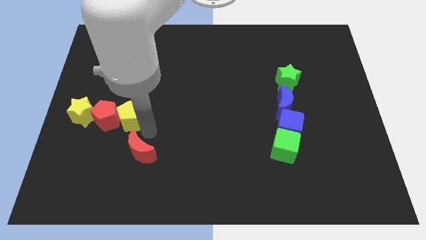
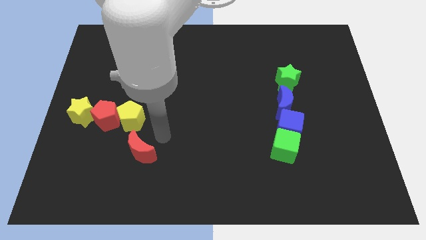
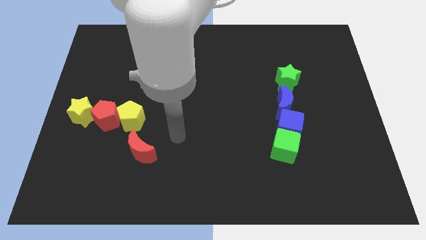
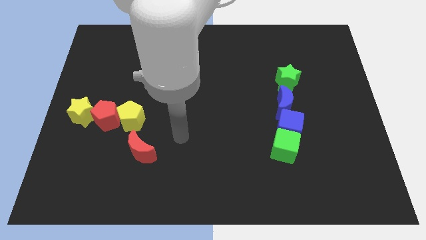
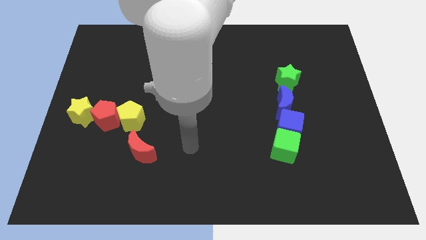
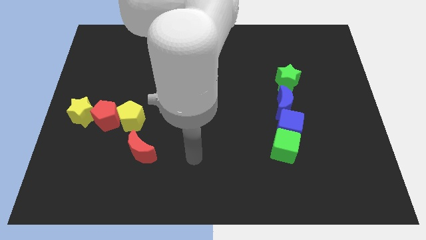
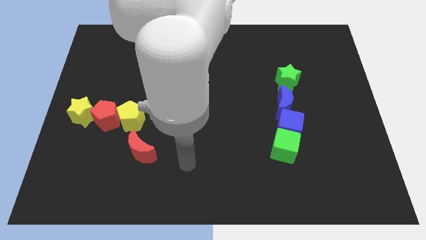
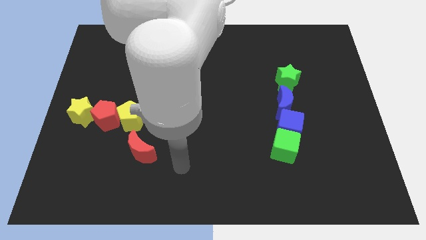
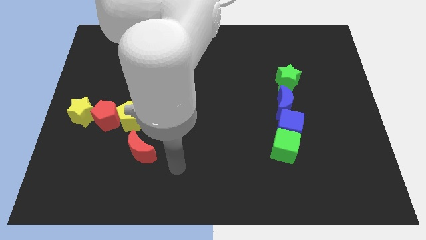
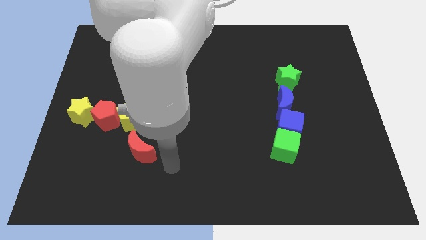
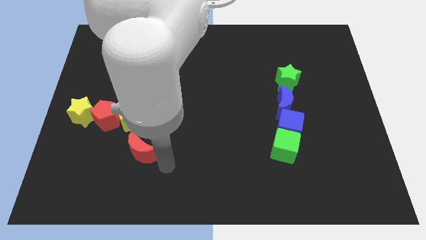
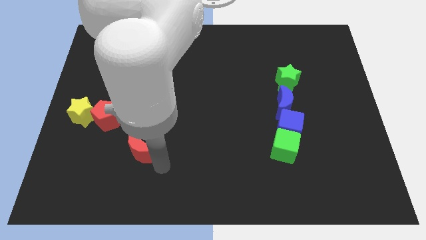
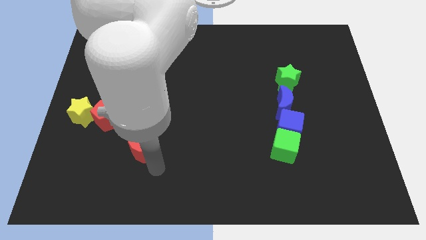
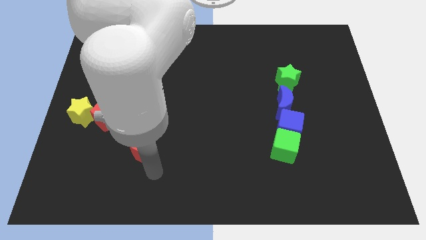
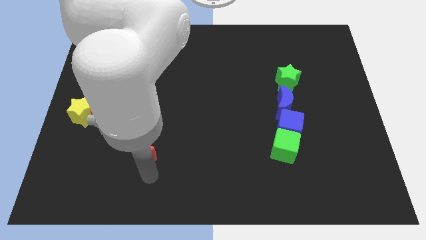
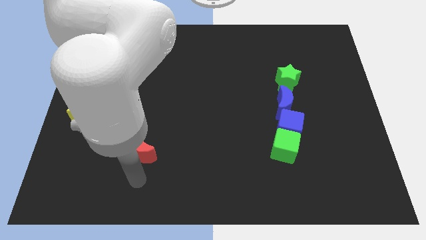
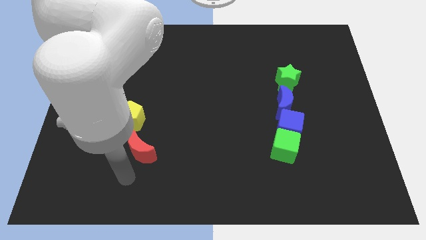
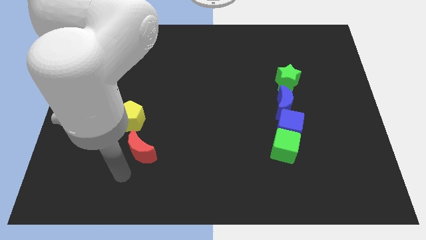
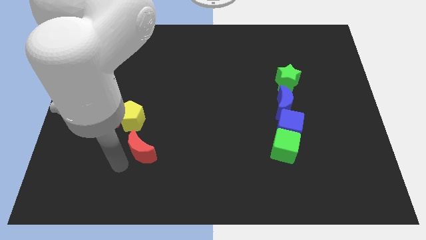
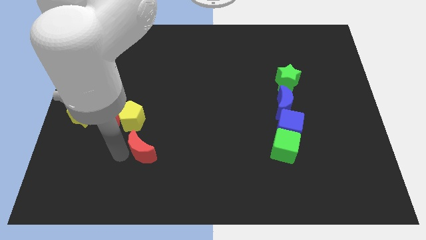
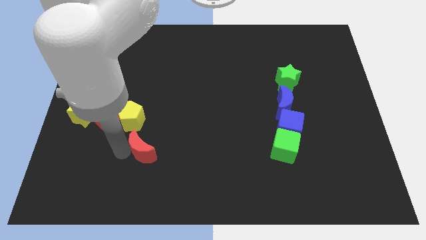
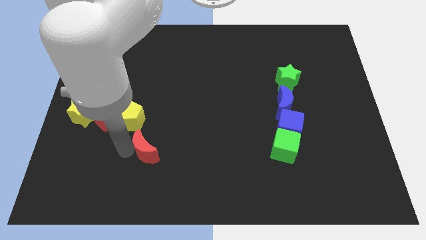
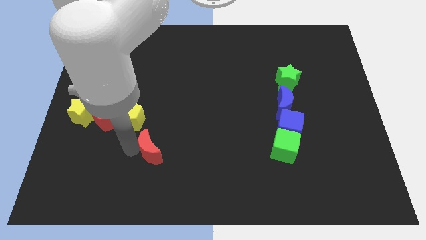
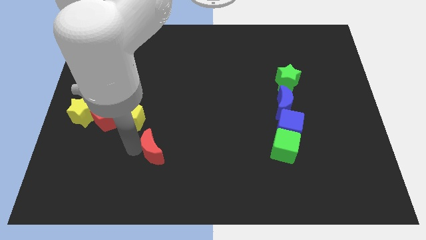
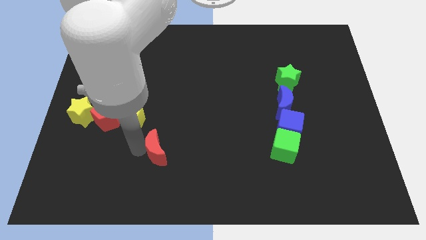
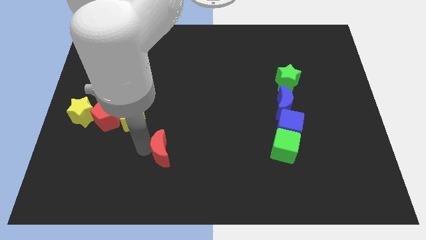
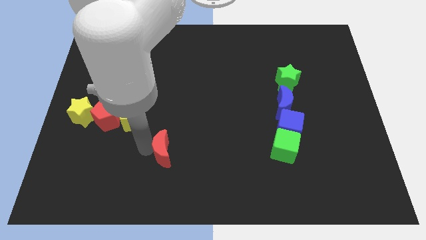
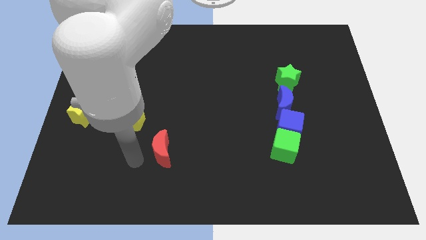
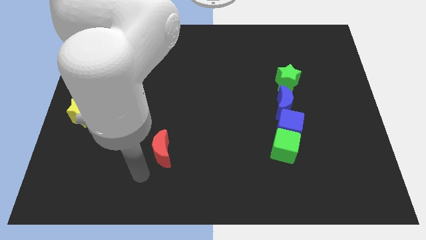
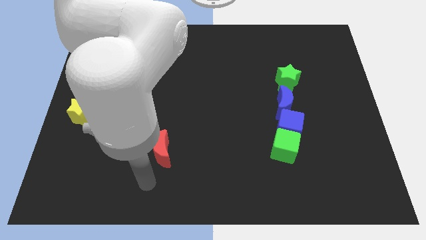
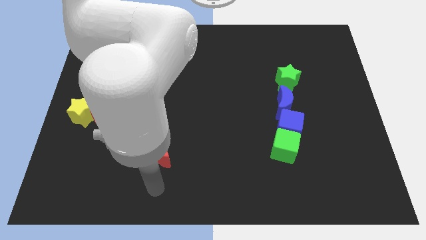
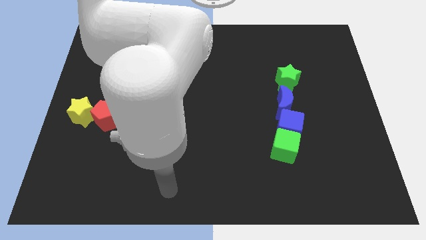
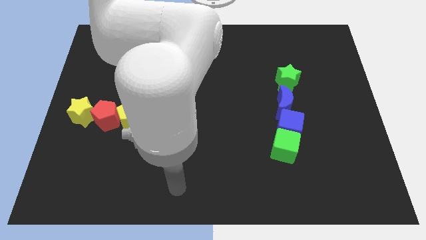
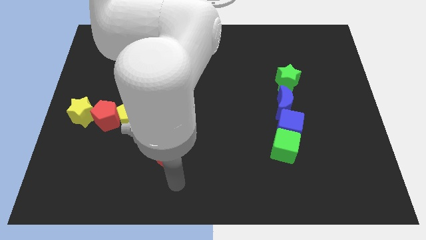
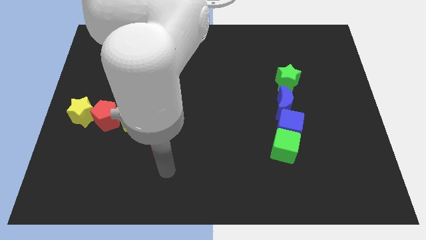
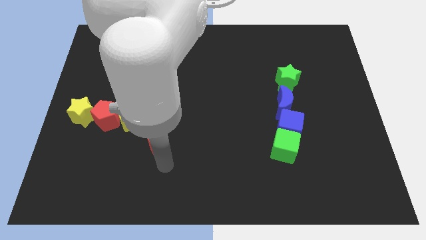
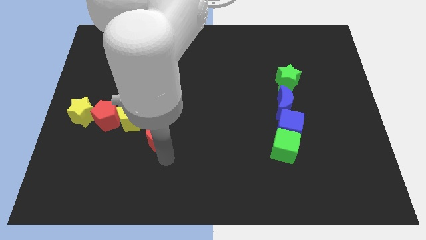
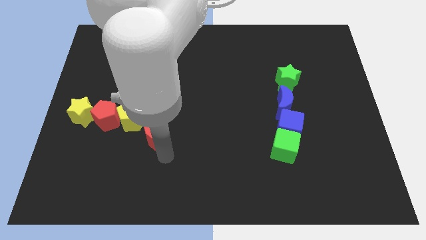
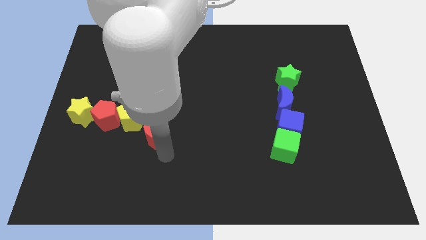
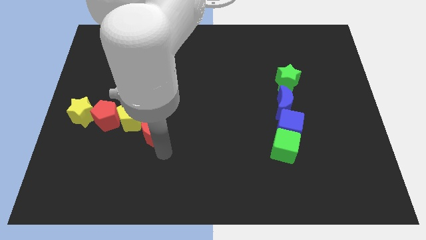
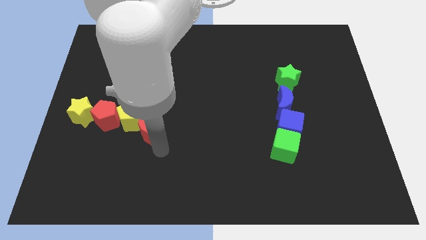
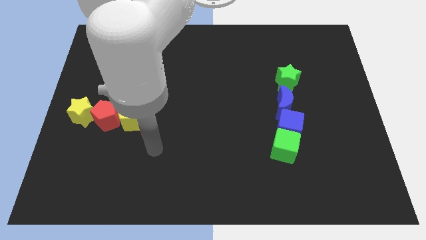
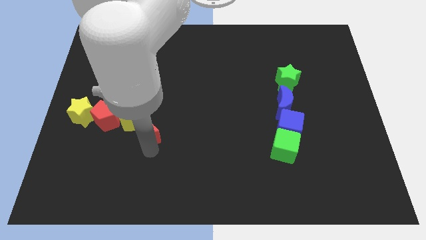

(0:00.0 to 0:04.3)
move red crescent to the right yellow pentagon

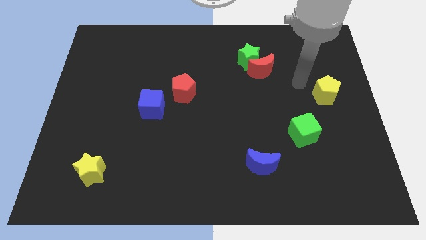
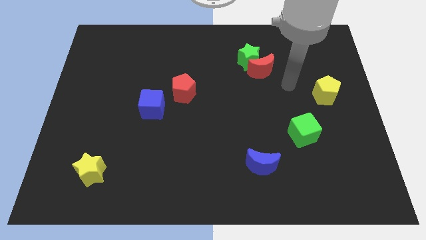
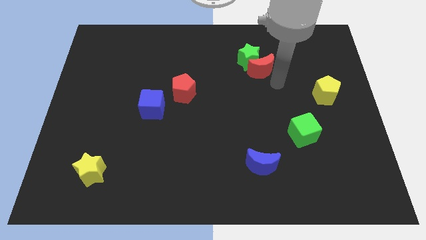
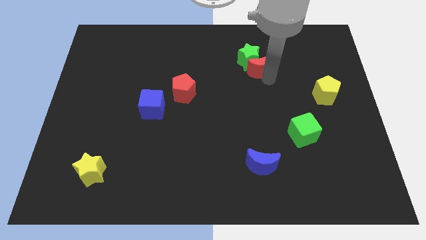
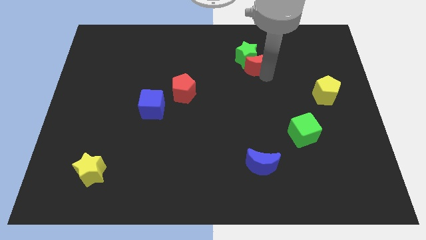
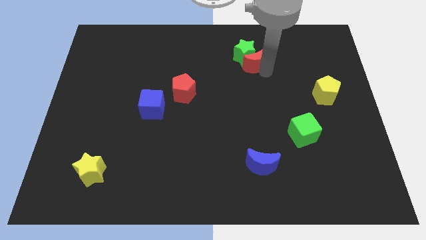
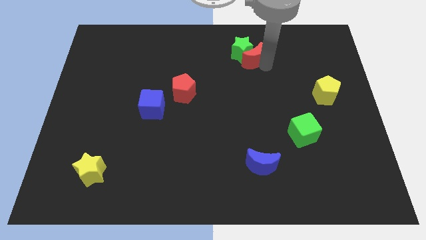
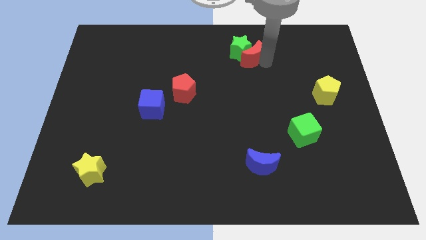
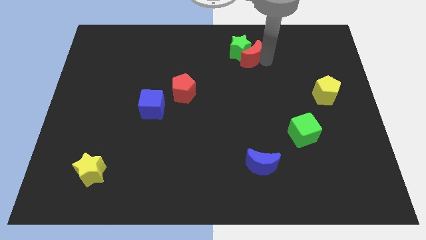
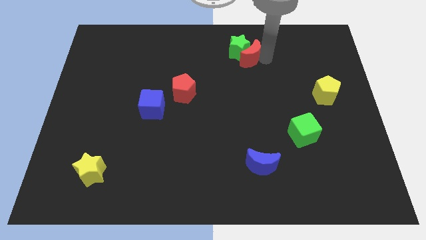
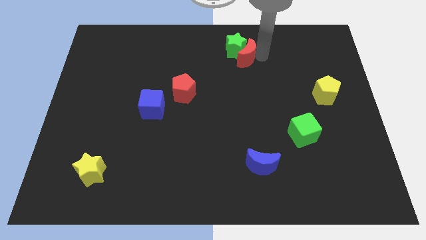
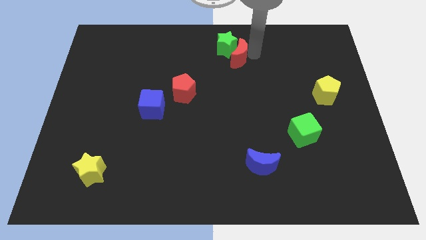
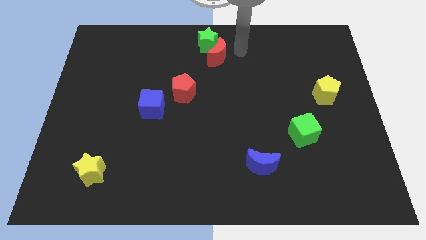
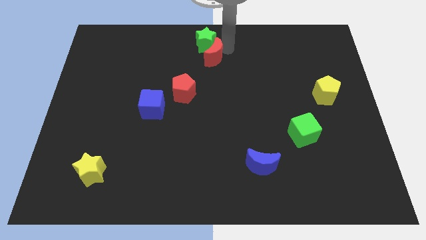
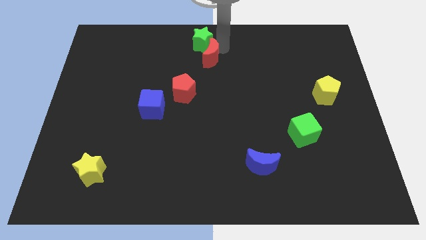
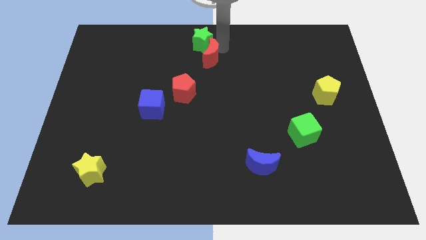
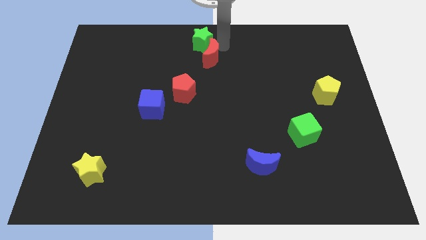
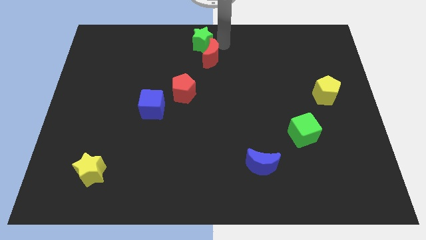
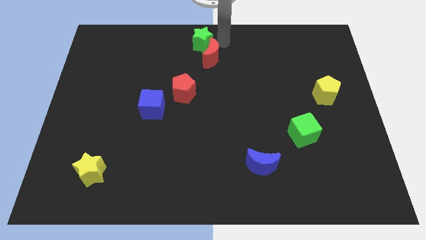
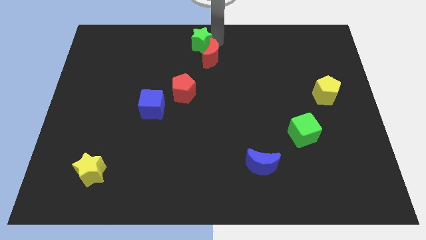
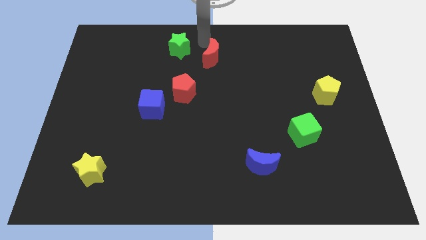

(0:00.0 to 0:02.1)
move green star towards left side of the board

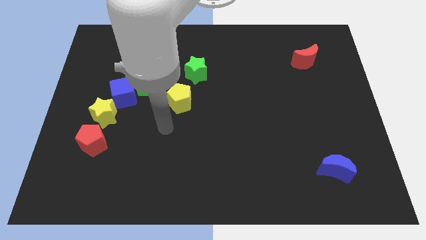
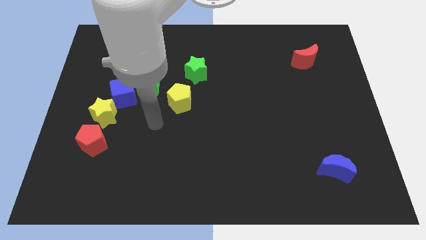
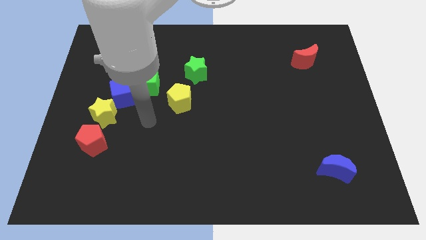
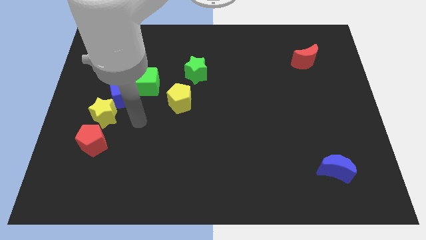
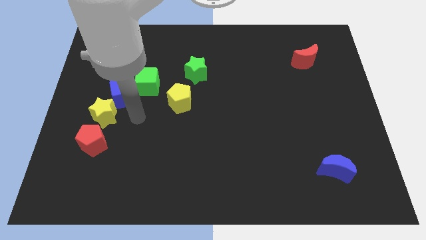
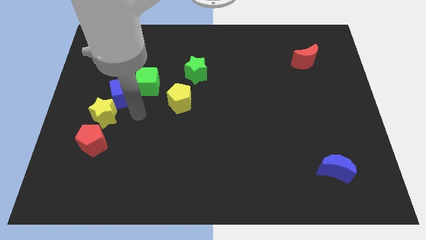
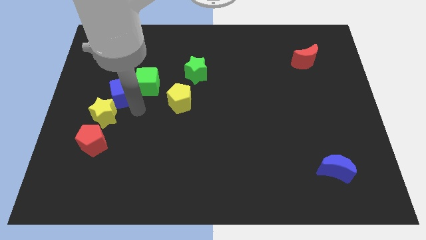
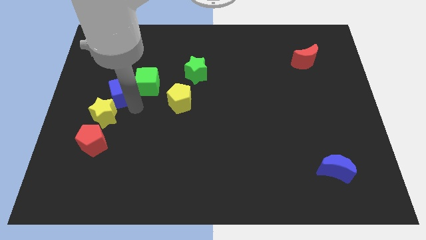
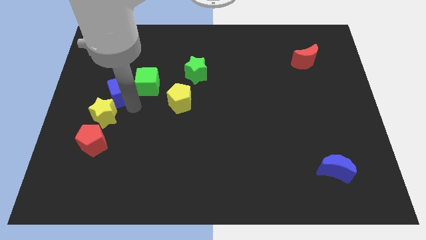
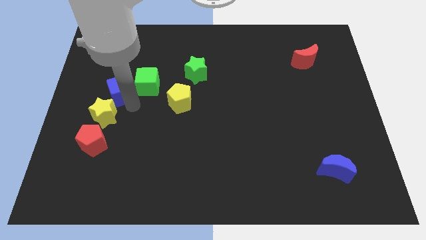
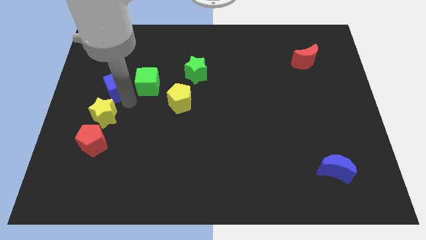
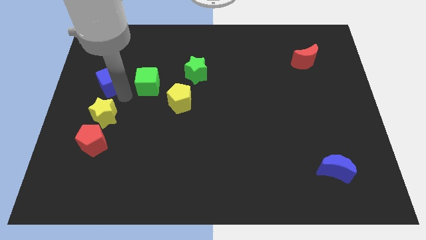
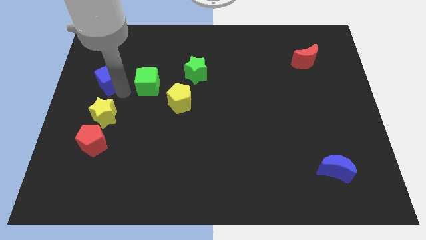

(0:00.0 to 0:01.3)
move the blue cube above the yellow star

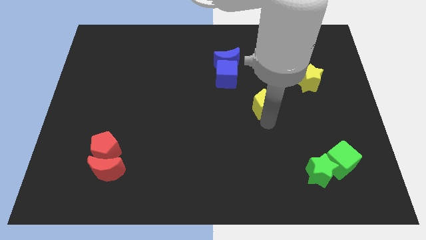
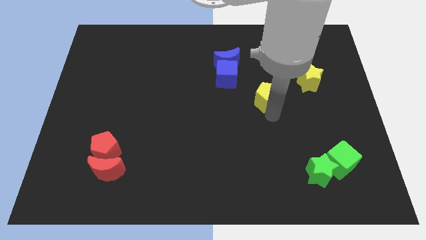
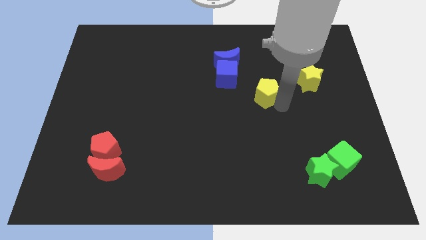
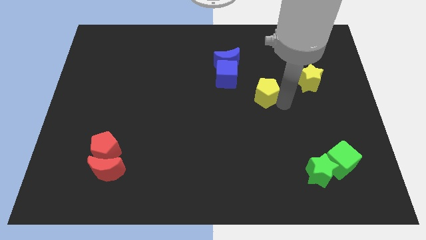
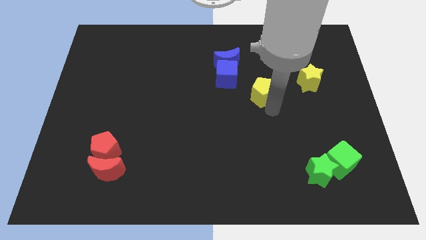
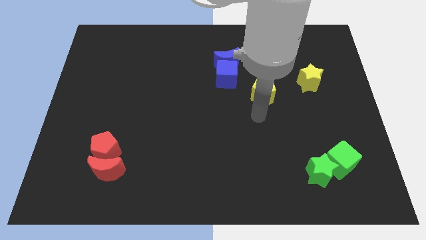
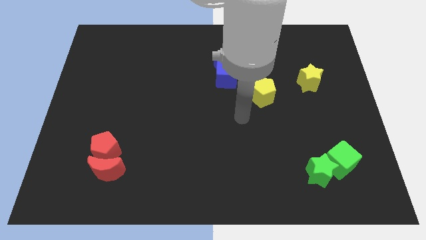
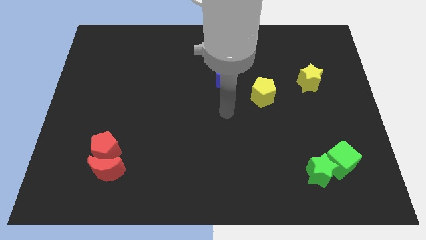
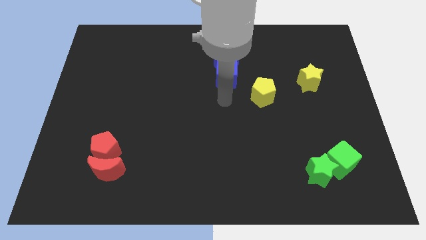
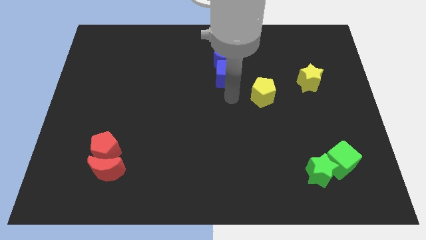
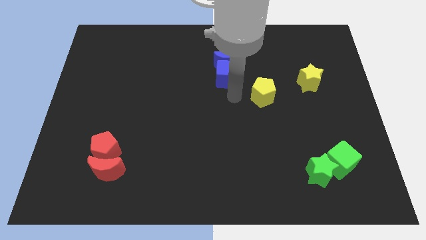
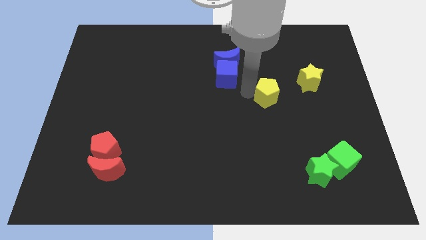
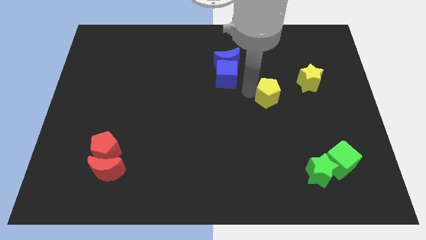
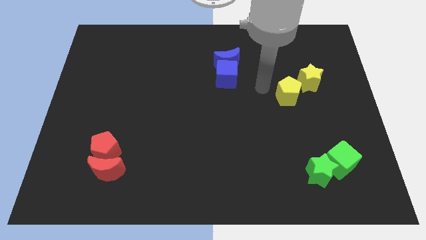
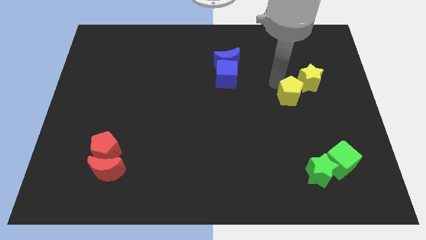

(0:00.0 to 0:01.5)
move yellow pentagon towards yellow star
